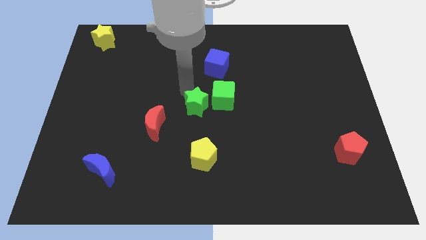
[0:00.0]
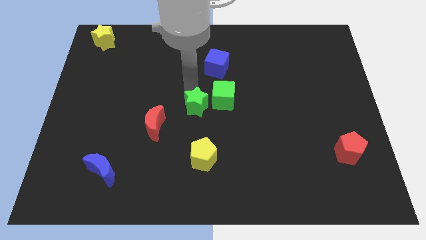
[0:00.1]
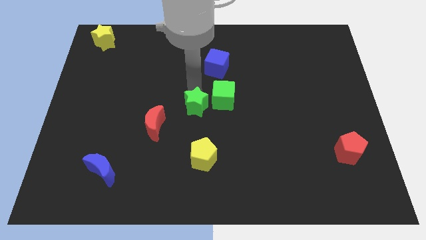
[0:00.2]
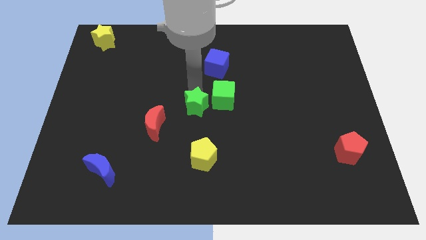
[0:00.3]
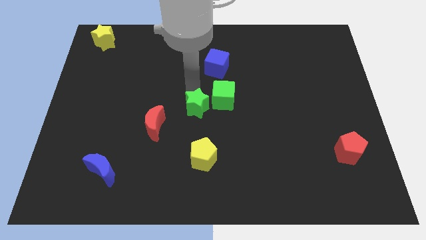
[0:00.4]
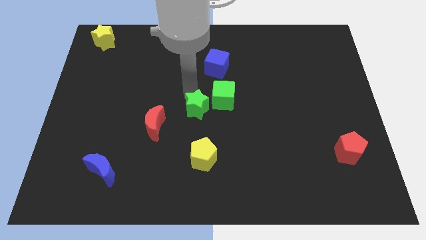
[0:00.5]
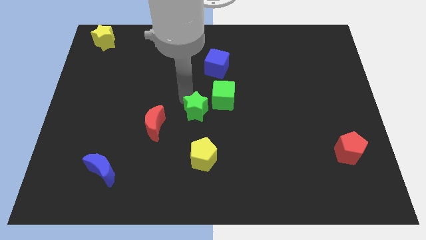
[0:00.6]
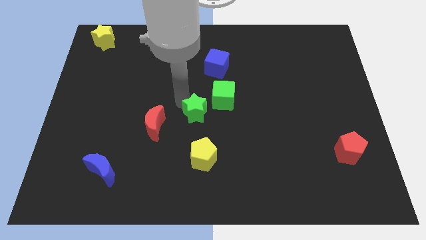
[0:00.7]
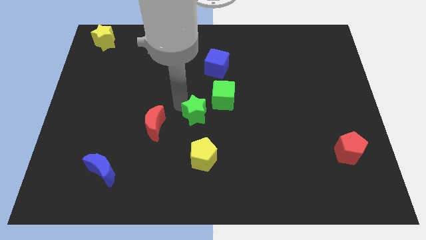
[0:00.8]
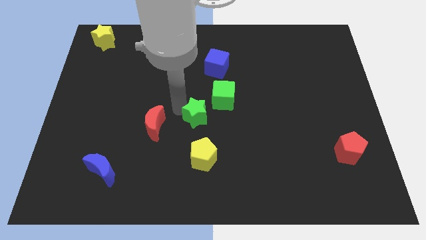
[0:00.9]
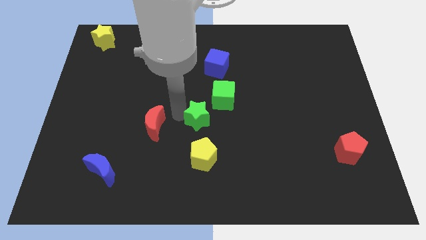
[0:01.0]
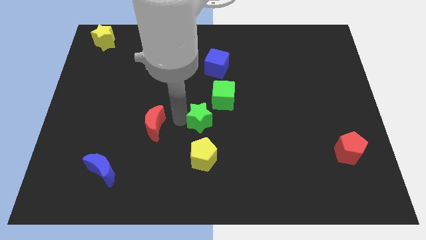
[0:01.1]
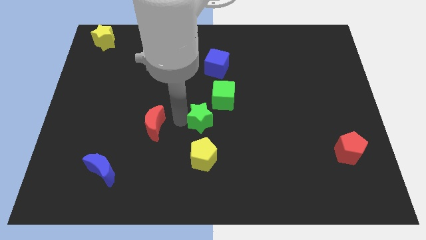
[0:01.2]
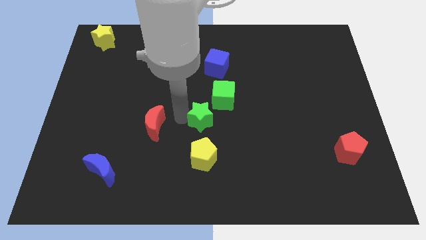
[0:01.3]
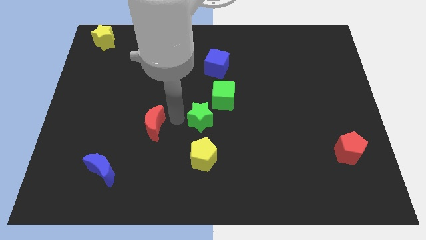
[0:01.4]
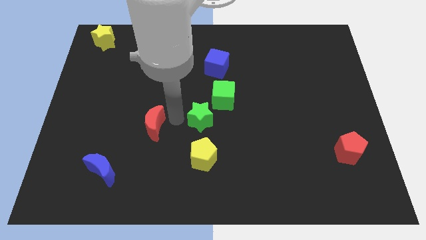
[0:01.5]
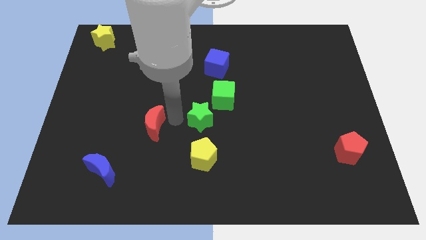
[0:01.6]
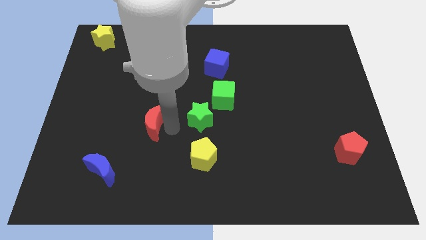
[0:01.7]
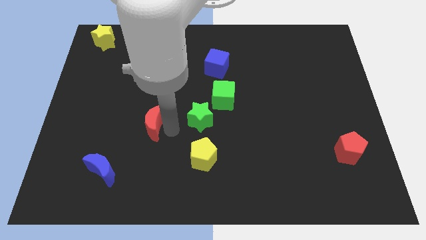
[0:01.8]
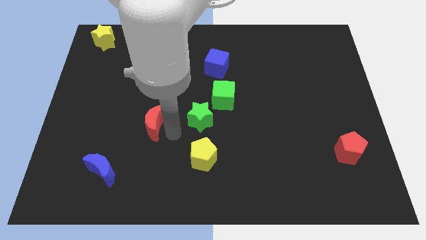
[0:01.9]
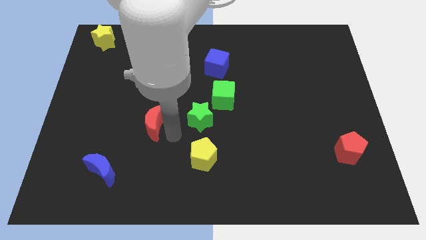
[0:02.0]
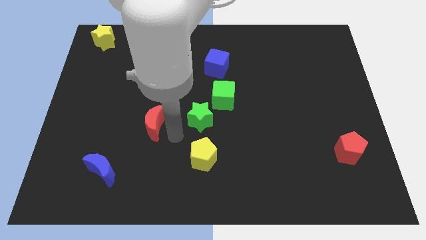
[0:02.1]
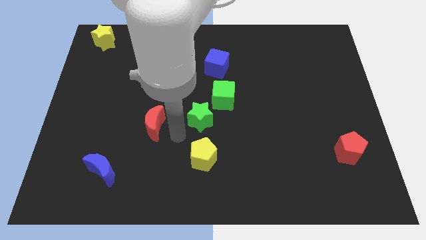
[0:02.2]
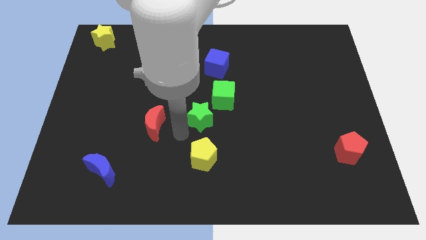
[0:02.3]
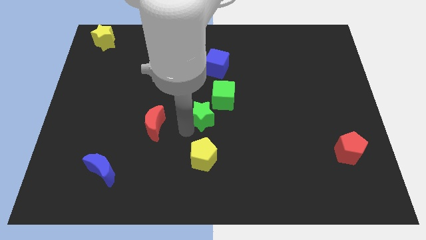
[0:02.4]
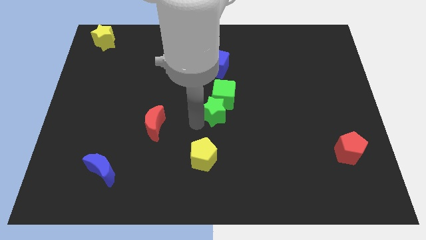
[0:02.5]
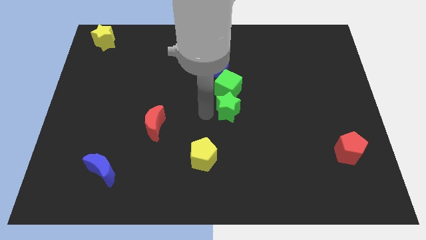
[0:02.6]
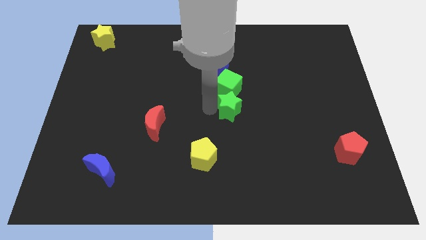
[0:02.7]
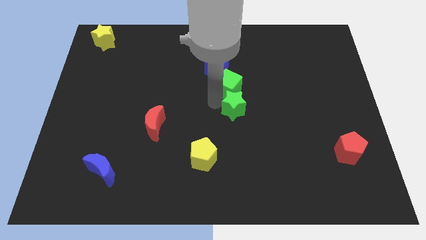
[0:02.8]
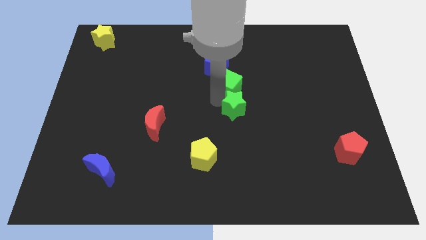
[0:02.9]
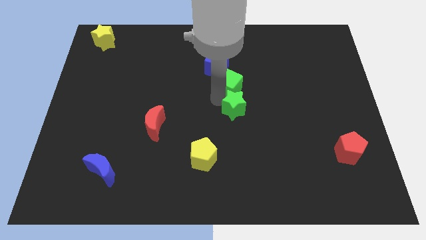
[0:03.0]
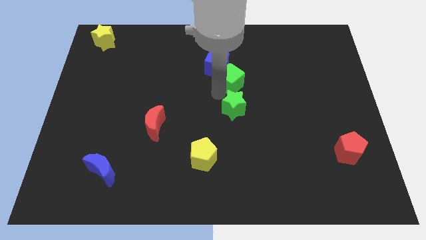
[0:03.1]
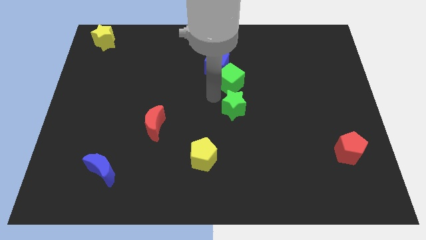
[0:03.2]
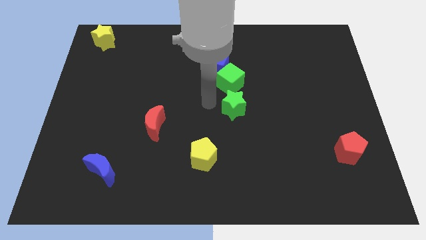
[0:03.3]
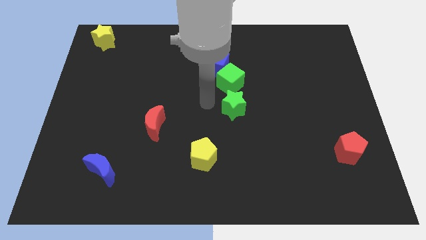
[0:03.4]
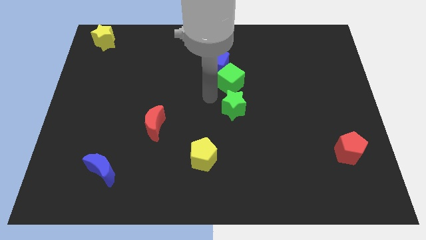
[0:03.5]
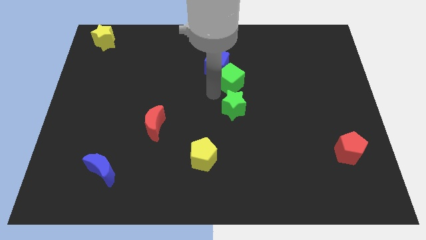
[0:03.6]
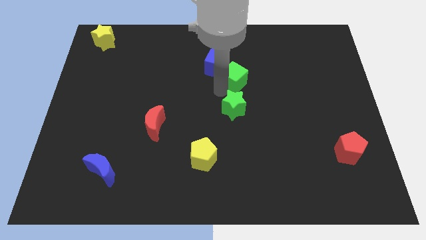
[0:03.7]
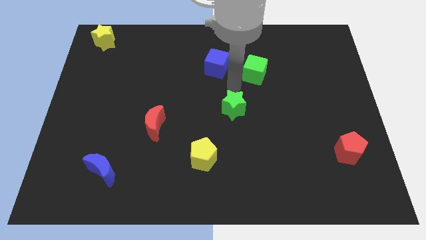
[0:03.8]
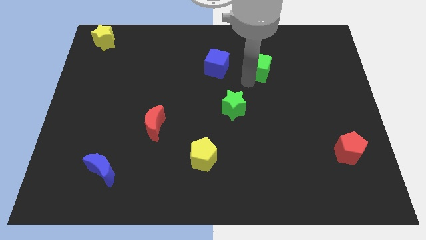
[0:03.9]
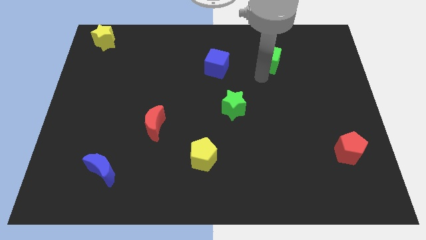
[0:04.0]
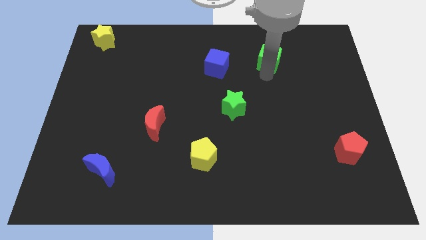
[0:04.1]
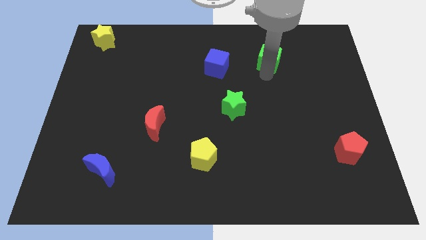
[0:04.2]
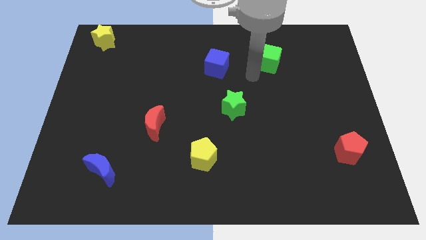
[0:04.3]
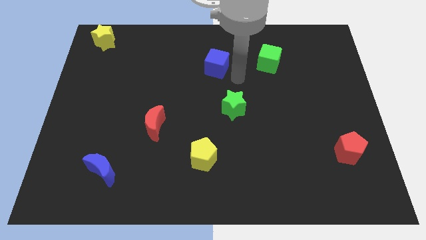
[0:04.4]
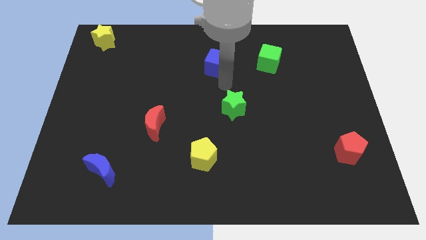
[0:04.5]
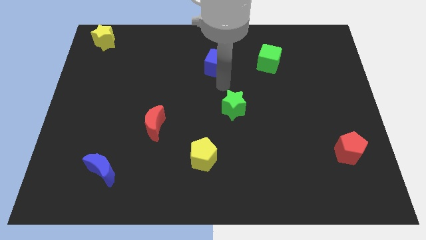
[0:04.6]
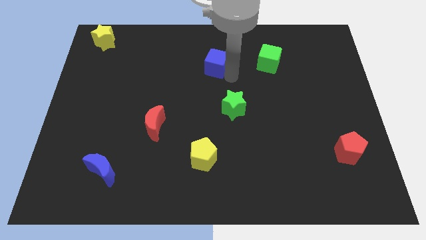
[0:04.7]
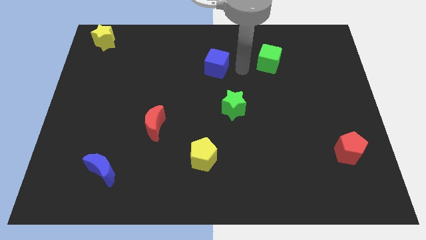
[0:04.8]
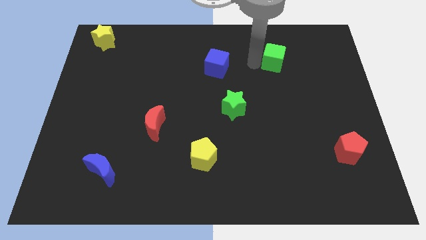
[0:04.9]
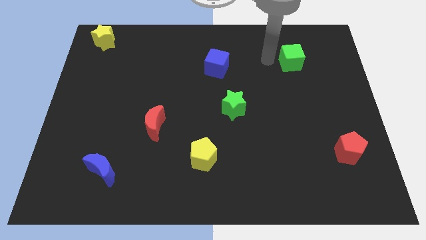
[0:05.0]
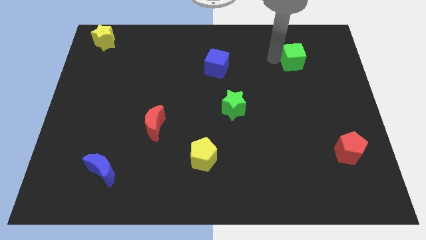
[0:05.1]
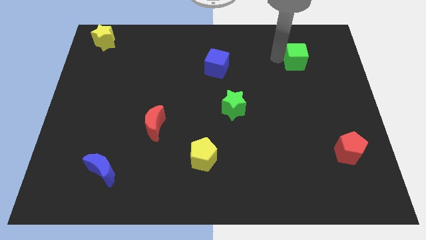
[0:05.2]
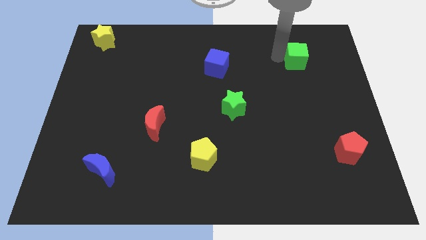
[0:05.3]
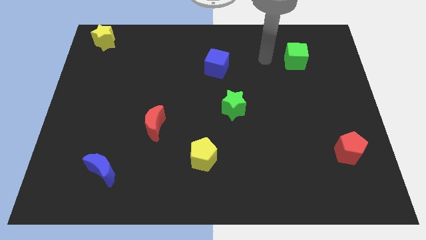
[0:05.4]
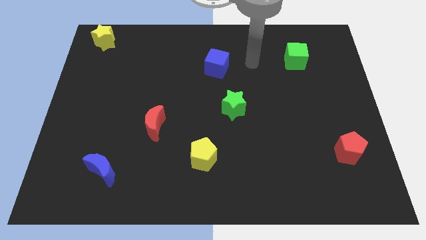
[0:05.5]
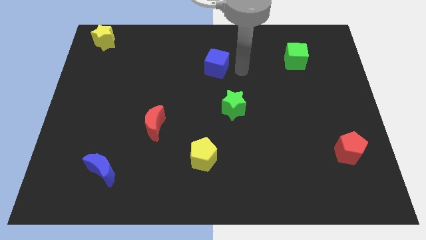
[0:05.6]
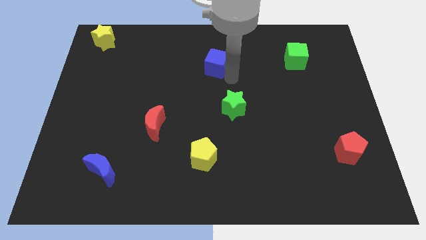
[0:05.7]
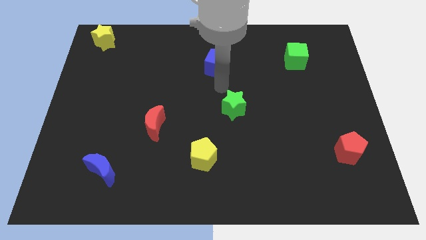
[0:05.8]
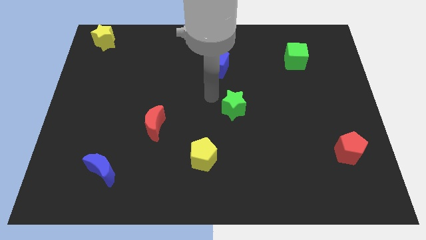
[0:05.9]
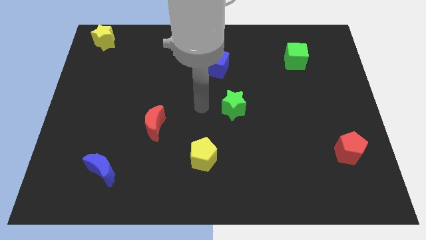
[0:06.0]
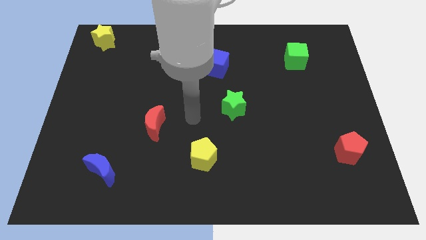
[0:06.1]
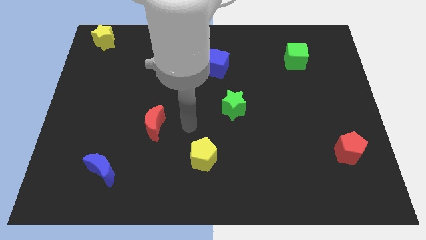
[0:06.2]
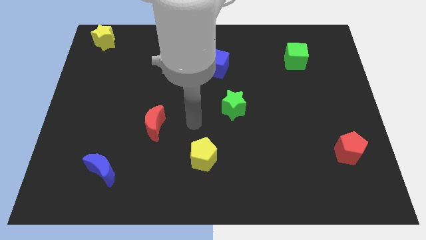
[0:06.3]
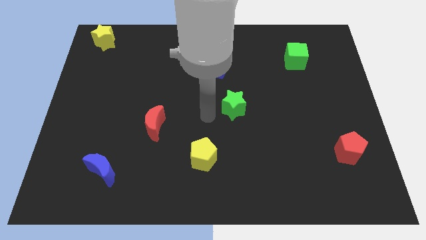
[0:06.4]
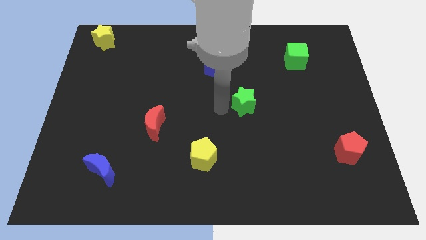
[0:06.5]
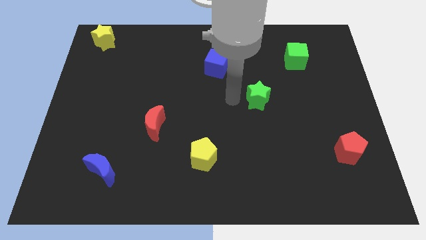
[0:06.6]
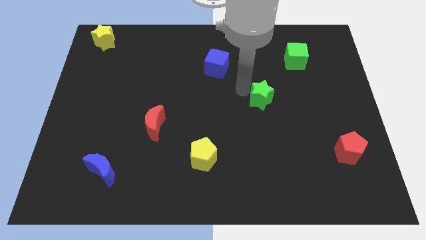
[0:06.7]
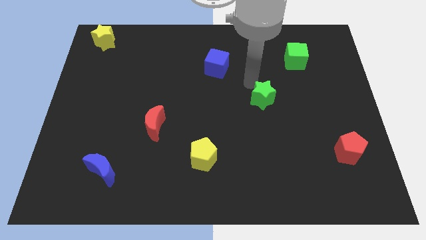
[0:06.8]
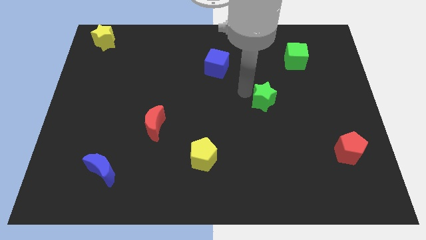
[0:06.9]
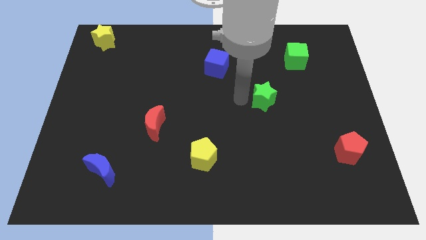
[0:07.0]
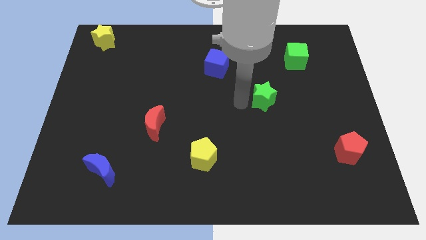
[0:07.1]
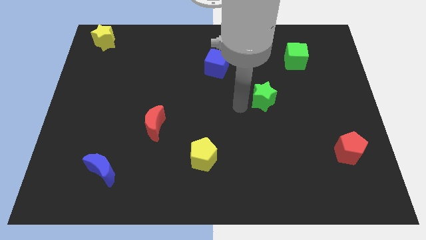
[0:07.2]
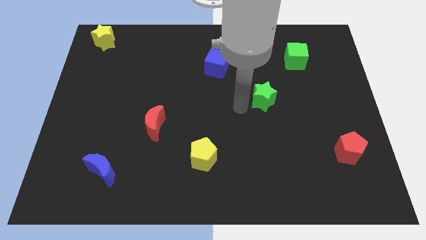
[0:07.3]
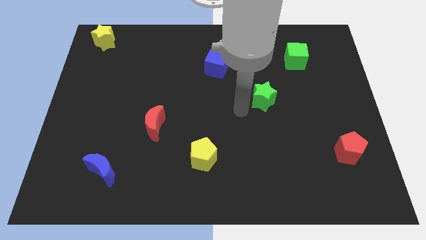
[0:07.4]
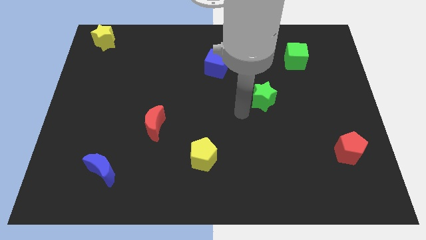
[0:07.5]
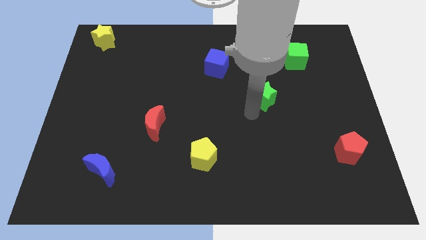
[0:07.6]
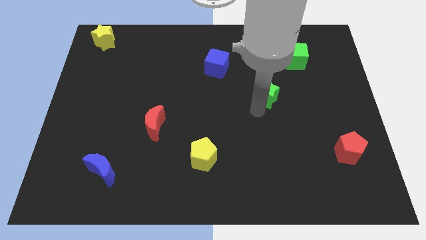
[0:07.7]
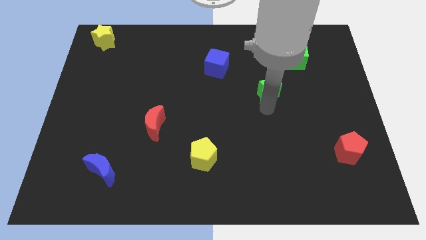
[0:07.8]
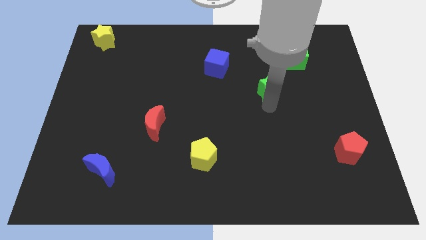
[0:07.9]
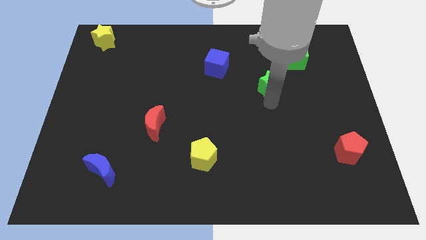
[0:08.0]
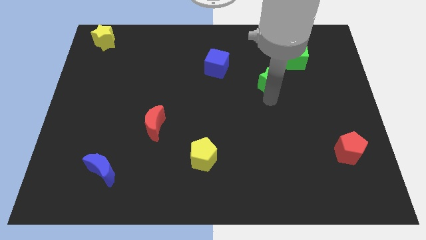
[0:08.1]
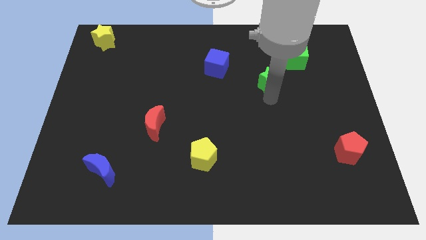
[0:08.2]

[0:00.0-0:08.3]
move green blocks towards top right of the board

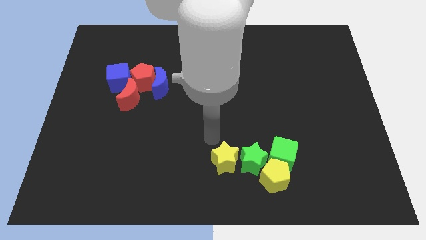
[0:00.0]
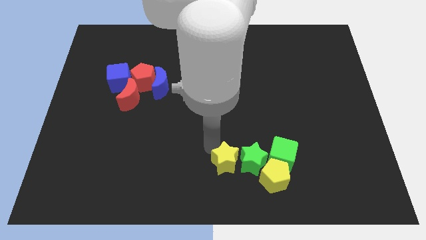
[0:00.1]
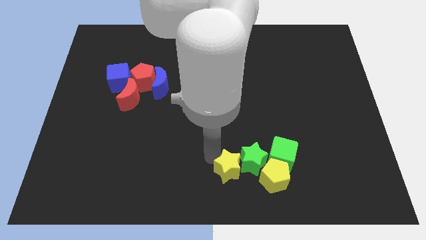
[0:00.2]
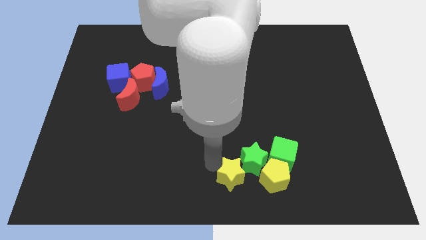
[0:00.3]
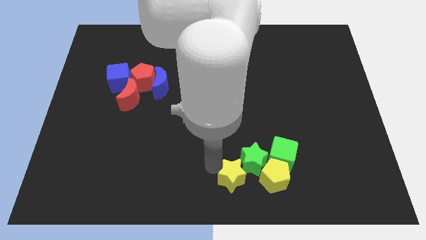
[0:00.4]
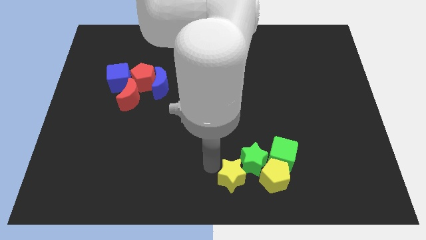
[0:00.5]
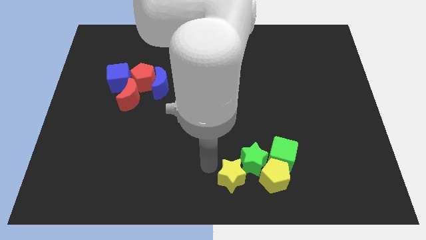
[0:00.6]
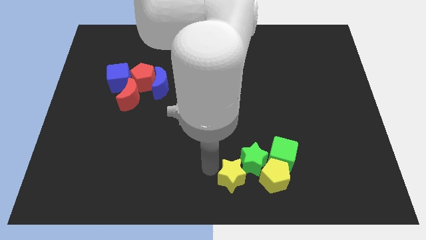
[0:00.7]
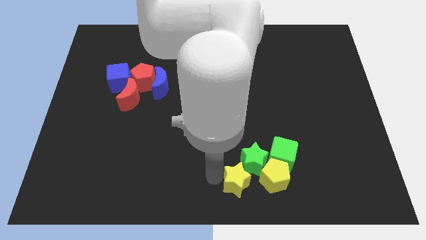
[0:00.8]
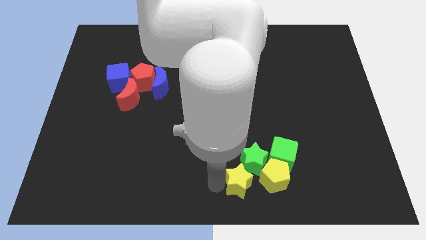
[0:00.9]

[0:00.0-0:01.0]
push the yellow star into the green star
